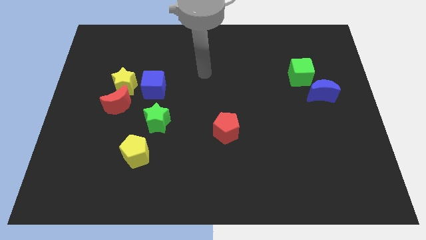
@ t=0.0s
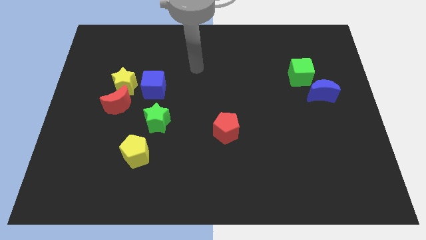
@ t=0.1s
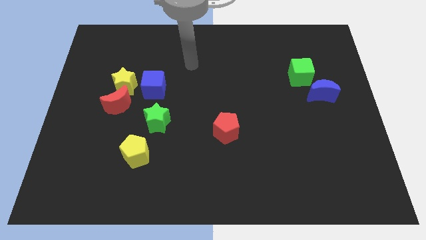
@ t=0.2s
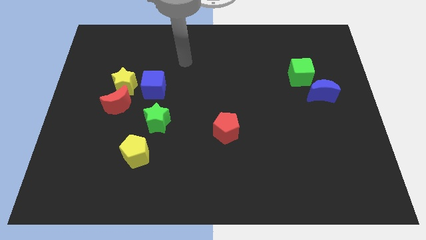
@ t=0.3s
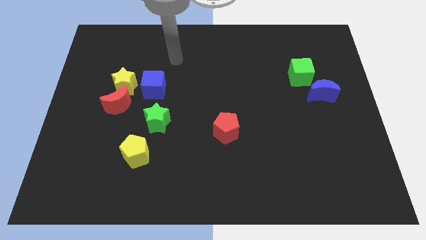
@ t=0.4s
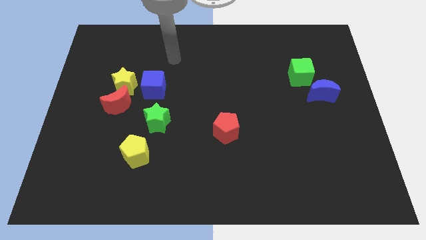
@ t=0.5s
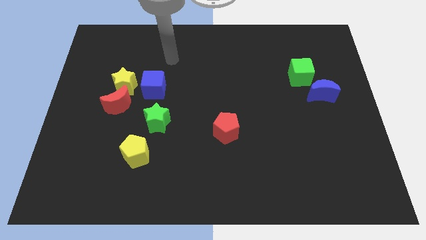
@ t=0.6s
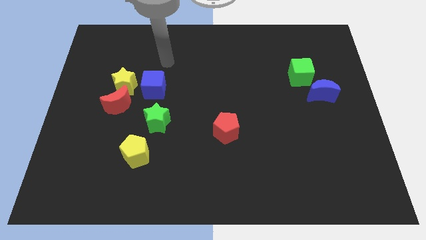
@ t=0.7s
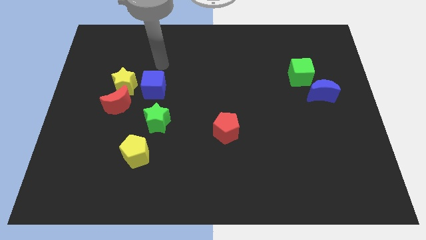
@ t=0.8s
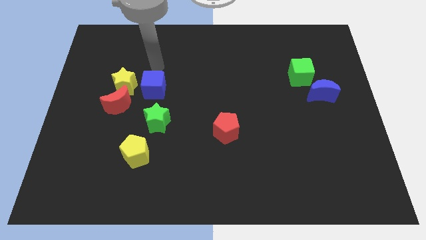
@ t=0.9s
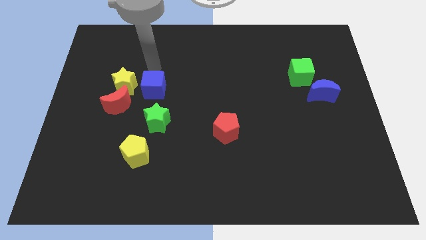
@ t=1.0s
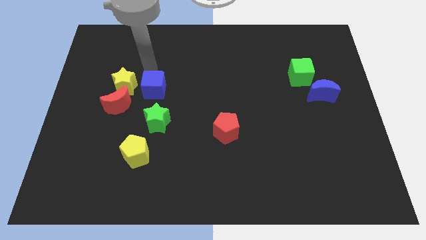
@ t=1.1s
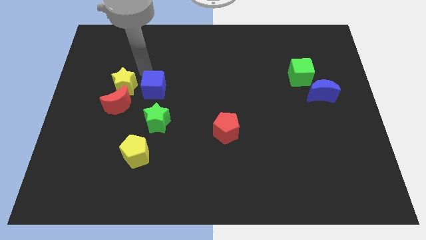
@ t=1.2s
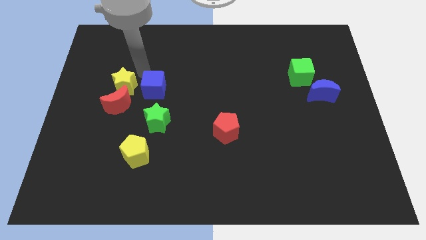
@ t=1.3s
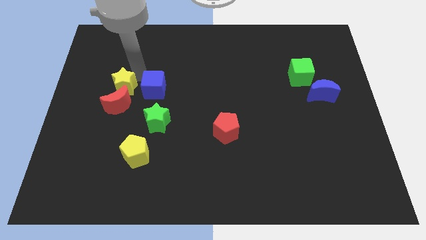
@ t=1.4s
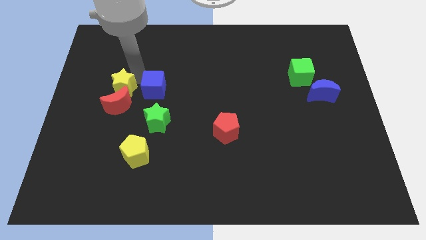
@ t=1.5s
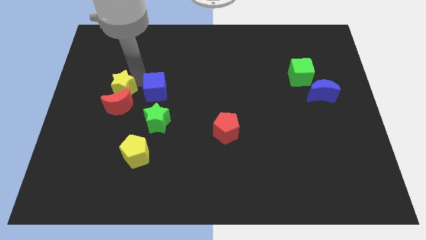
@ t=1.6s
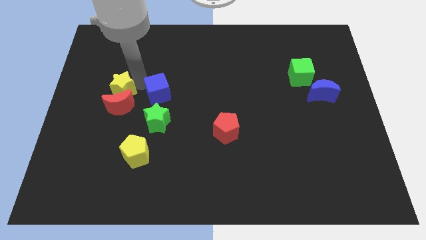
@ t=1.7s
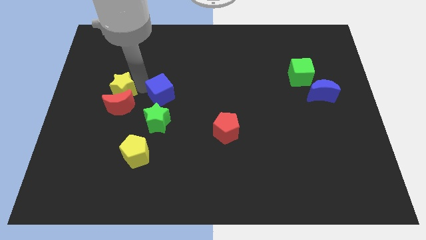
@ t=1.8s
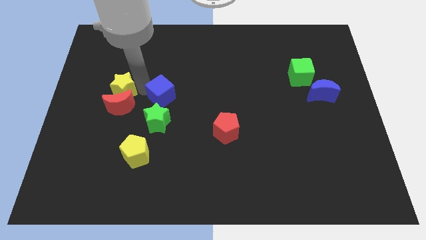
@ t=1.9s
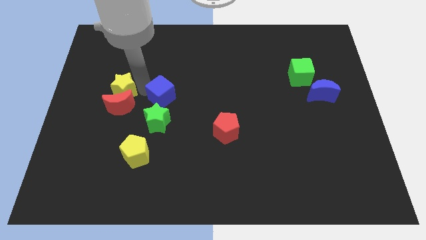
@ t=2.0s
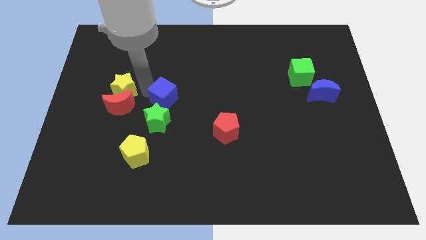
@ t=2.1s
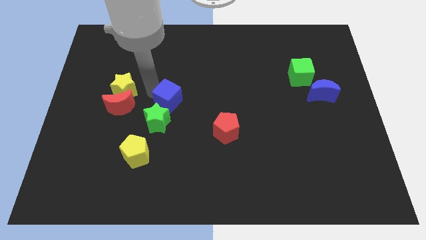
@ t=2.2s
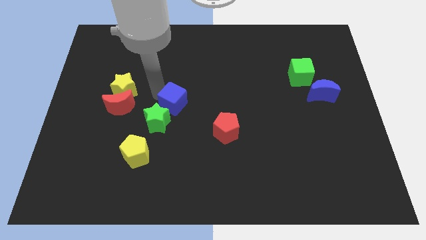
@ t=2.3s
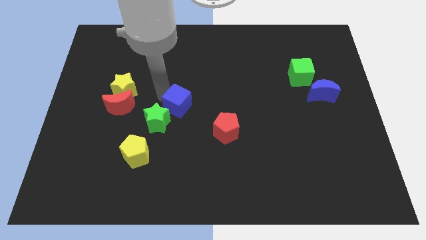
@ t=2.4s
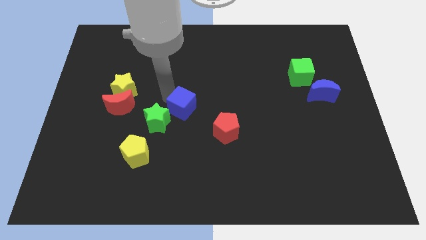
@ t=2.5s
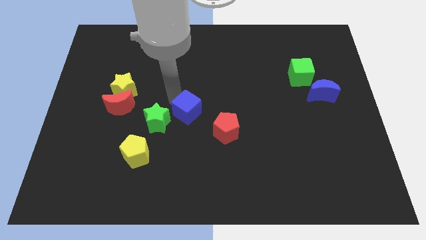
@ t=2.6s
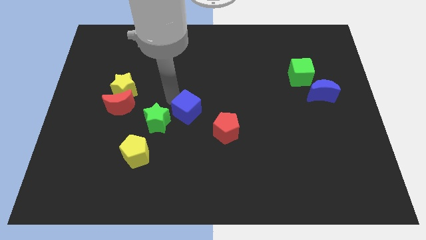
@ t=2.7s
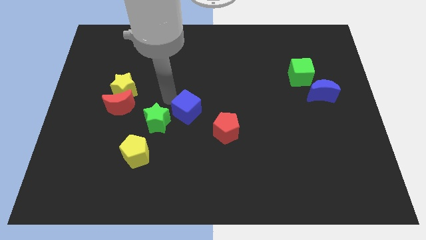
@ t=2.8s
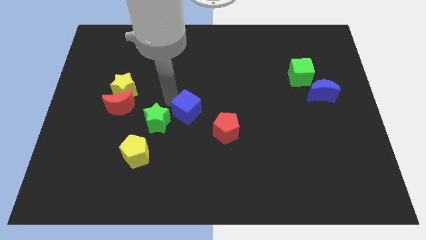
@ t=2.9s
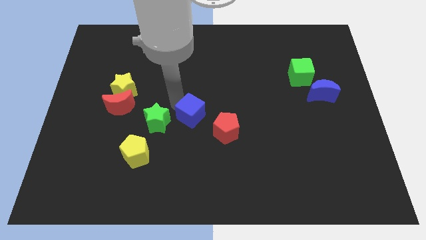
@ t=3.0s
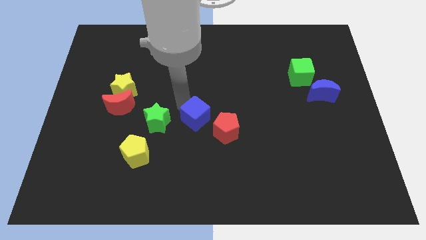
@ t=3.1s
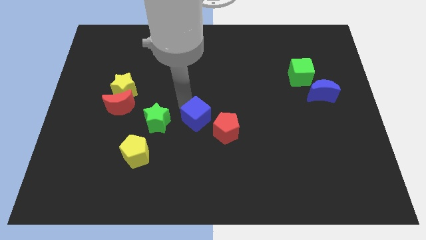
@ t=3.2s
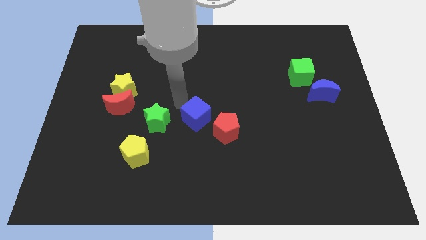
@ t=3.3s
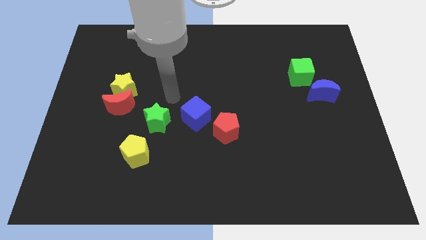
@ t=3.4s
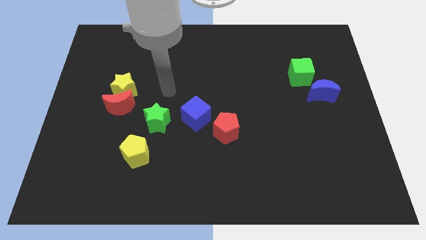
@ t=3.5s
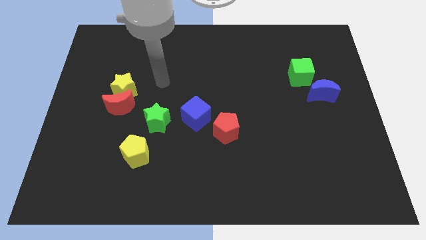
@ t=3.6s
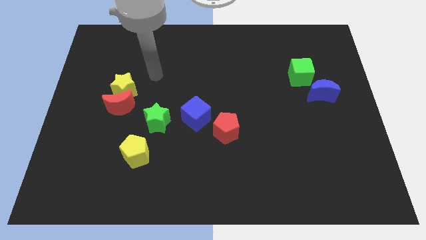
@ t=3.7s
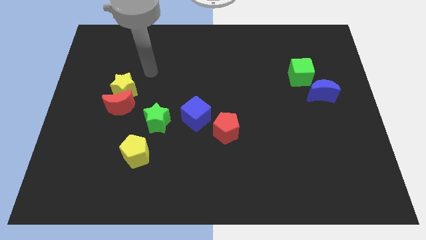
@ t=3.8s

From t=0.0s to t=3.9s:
place the blue cube to the left of the red pentagon

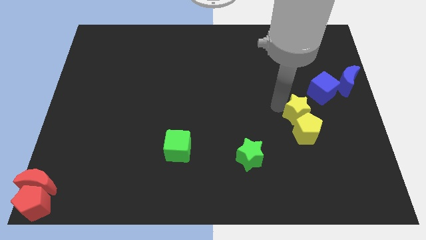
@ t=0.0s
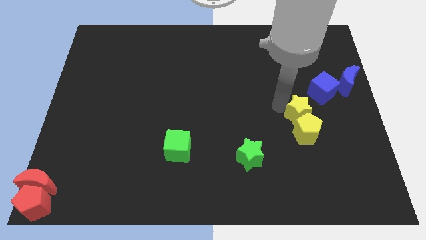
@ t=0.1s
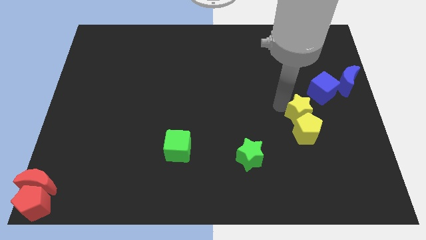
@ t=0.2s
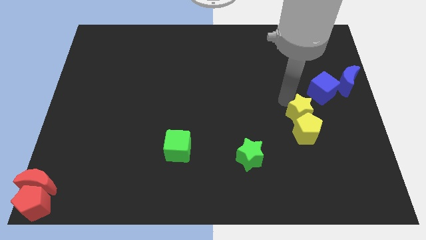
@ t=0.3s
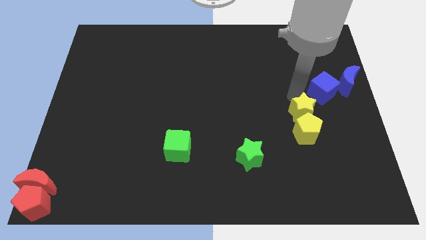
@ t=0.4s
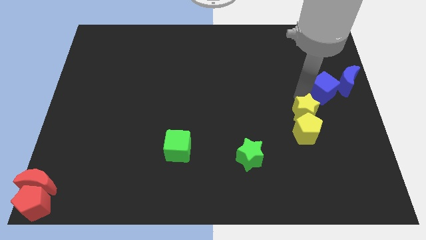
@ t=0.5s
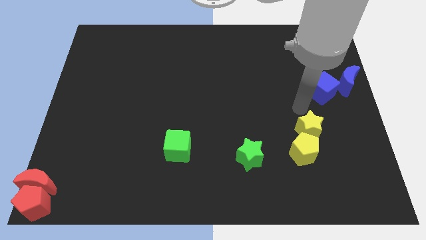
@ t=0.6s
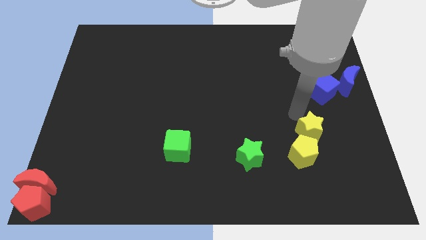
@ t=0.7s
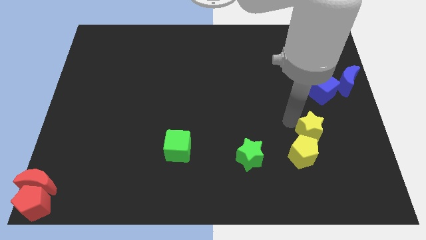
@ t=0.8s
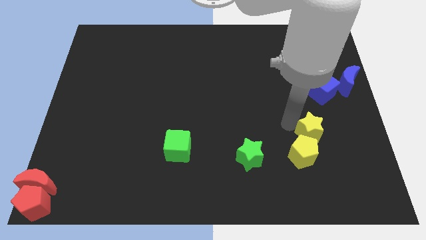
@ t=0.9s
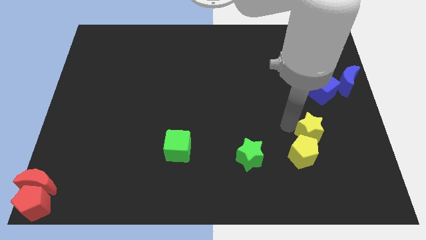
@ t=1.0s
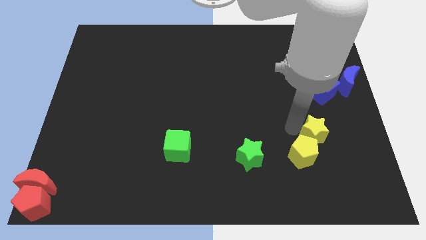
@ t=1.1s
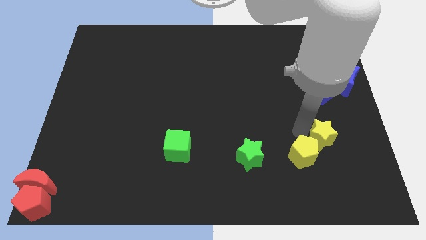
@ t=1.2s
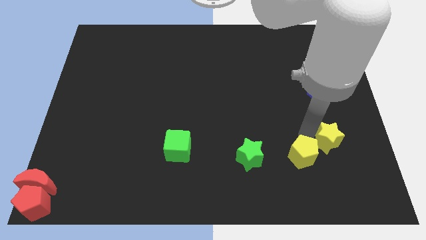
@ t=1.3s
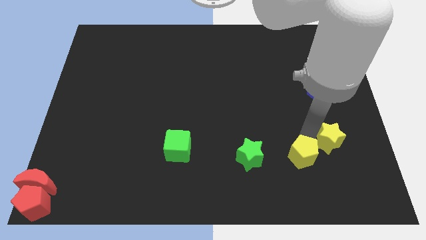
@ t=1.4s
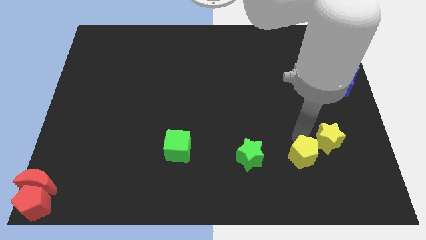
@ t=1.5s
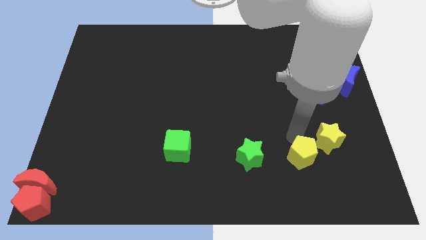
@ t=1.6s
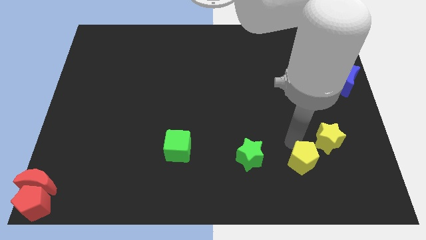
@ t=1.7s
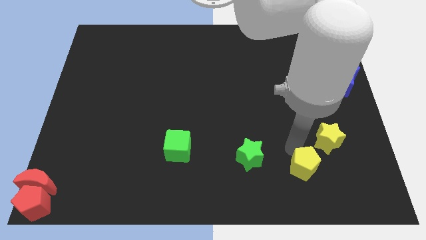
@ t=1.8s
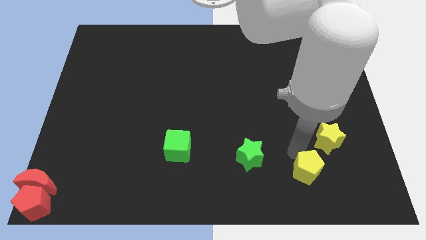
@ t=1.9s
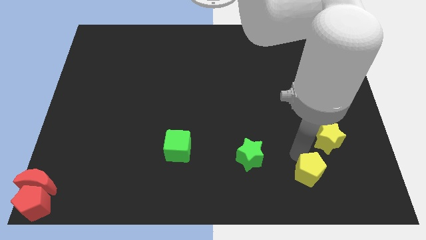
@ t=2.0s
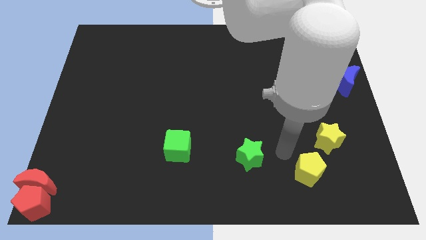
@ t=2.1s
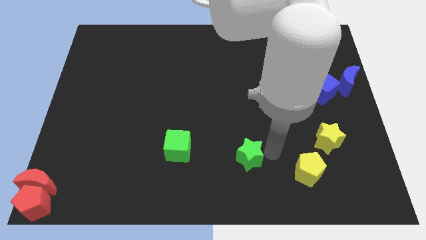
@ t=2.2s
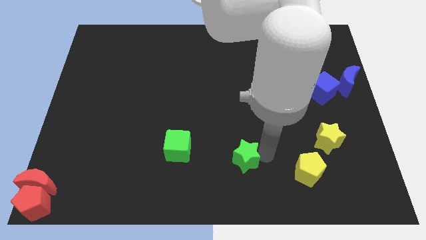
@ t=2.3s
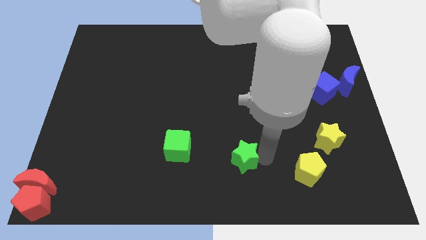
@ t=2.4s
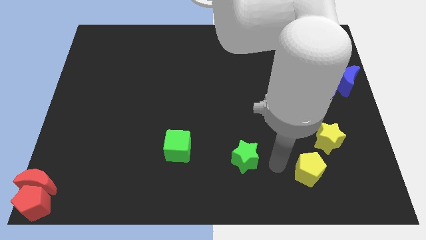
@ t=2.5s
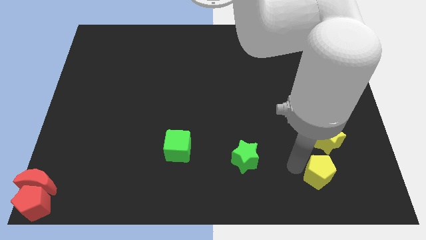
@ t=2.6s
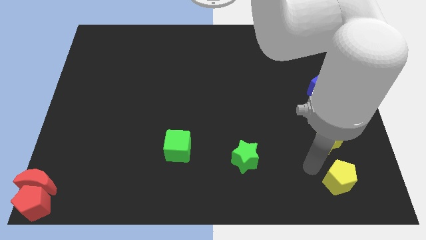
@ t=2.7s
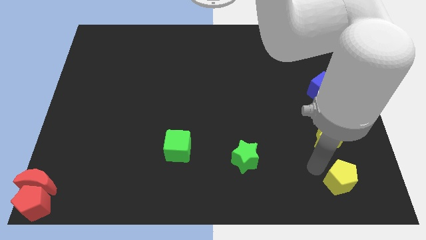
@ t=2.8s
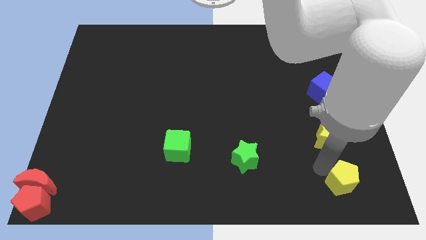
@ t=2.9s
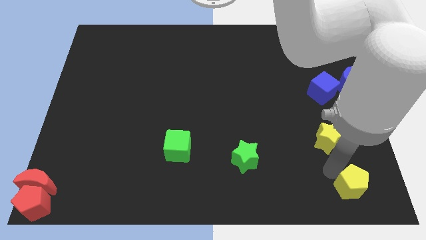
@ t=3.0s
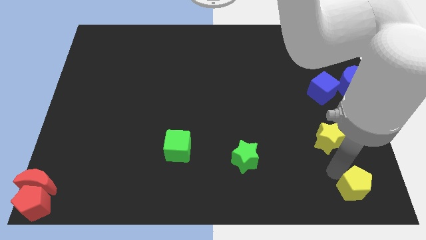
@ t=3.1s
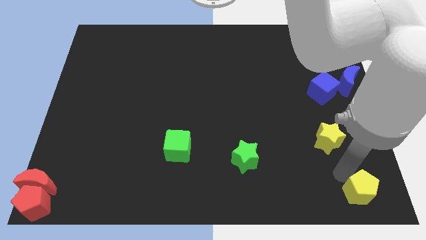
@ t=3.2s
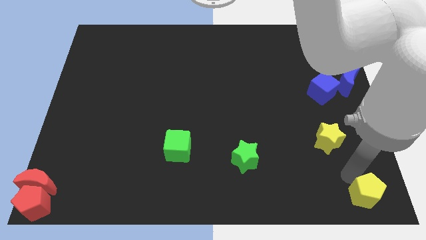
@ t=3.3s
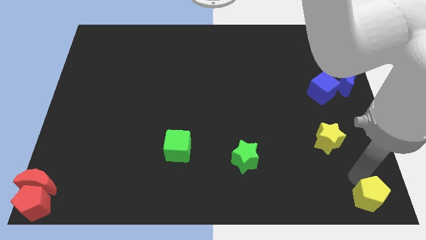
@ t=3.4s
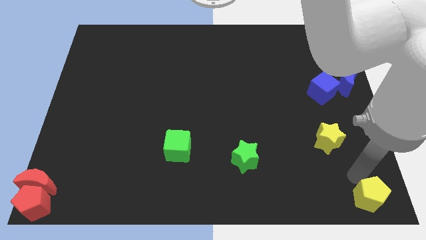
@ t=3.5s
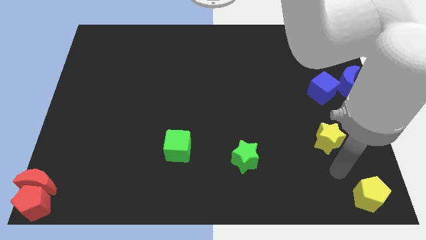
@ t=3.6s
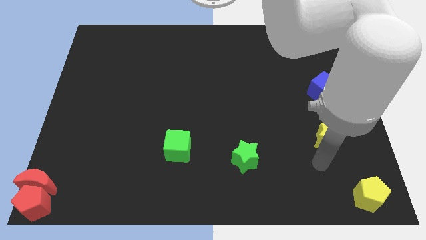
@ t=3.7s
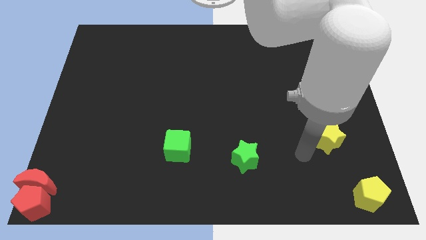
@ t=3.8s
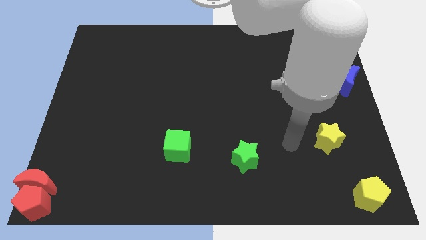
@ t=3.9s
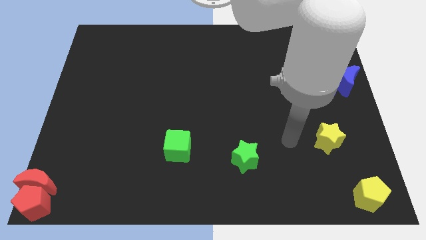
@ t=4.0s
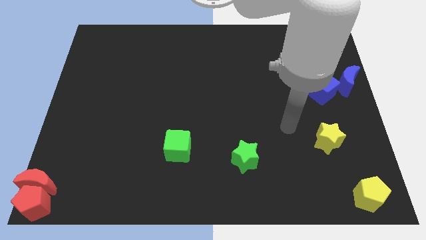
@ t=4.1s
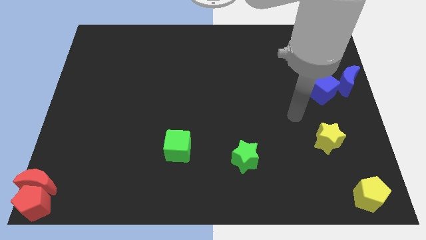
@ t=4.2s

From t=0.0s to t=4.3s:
place the yellow pentagon to the bottom right of the board

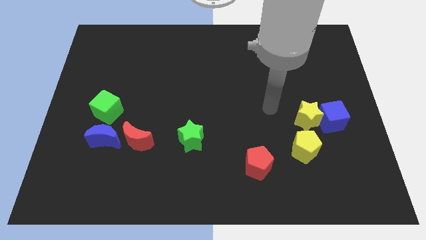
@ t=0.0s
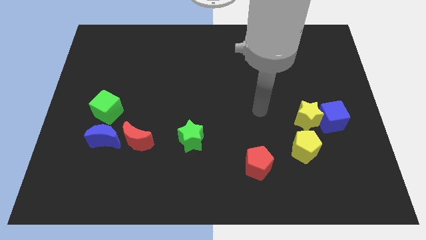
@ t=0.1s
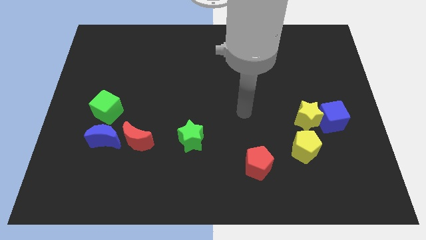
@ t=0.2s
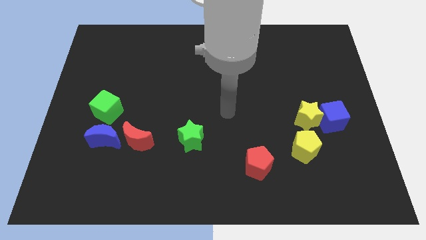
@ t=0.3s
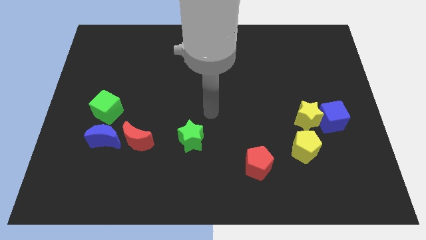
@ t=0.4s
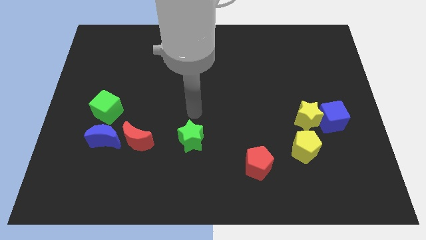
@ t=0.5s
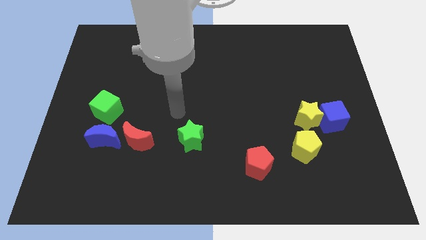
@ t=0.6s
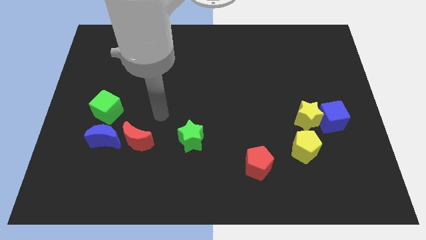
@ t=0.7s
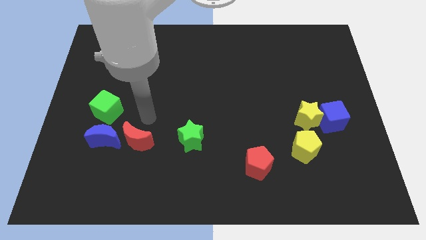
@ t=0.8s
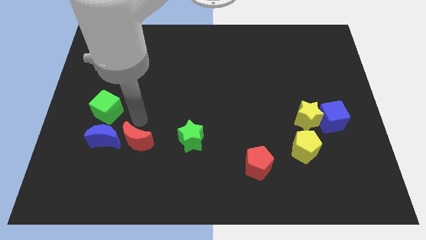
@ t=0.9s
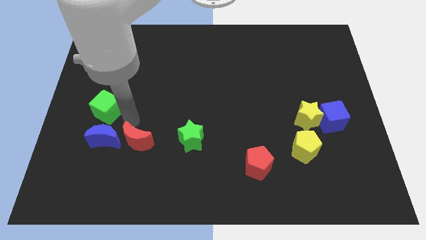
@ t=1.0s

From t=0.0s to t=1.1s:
point your arm at the top of the red crescent
